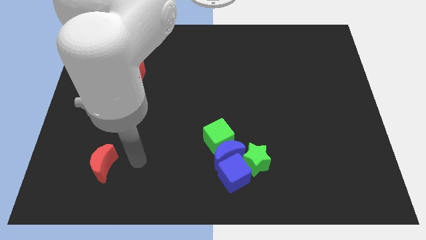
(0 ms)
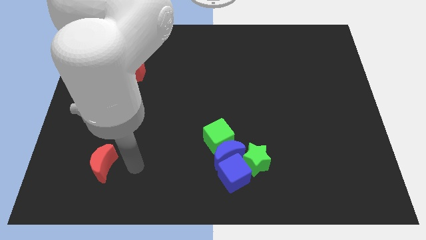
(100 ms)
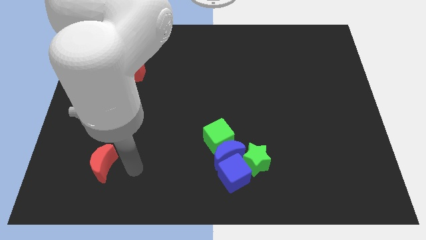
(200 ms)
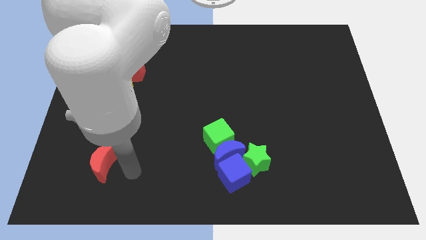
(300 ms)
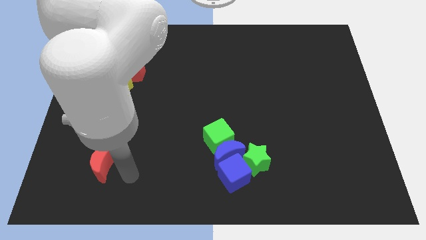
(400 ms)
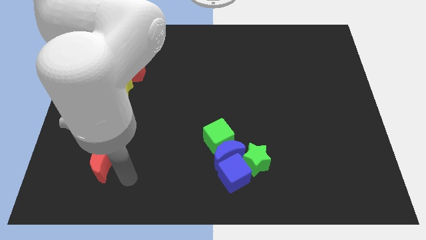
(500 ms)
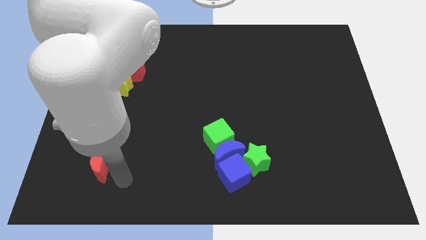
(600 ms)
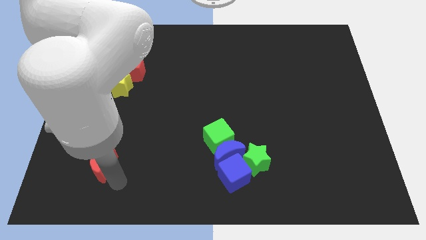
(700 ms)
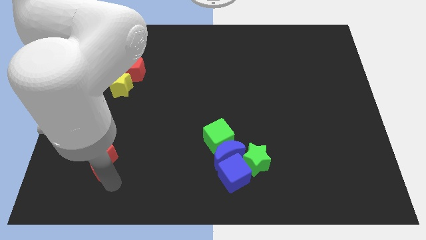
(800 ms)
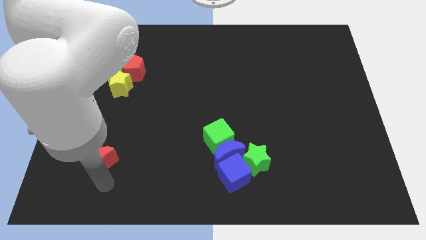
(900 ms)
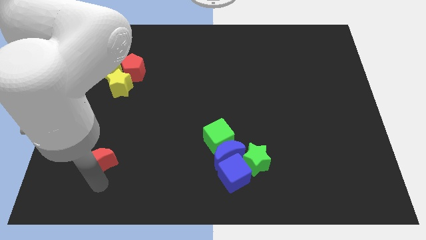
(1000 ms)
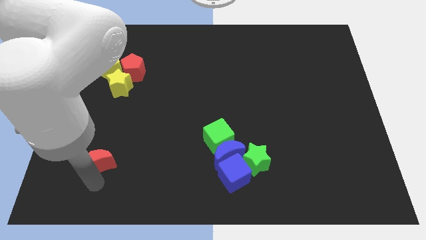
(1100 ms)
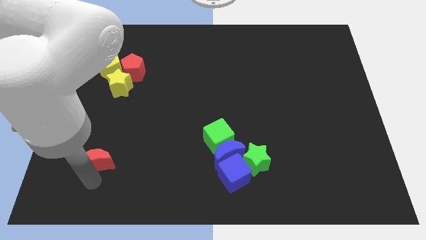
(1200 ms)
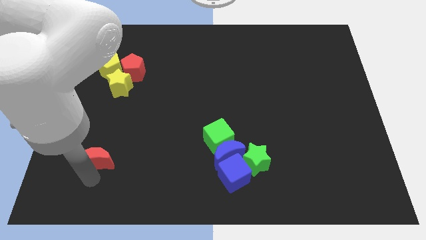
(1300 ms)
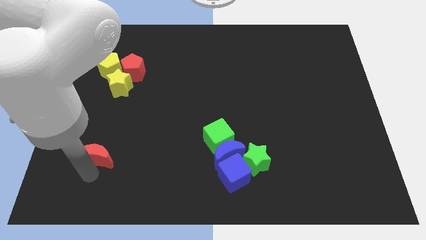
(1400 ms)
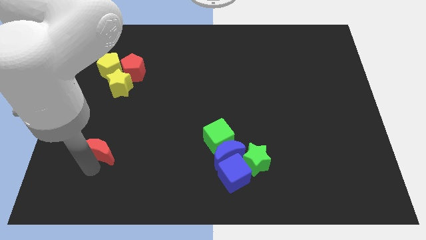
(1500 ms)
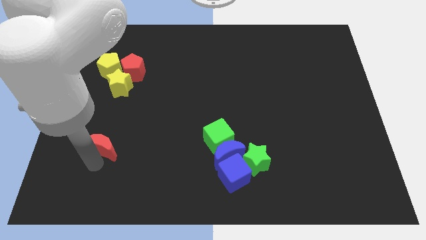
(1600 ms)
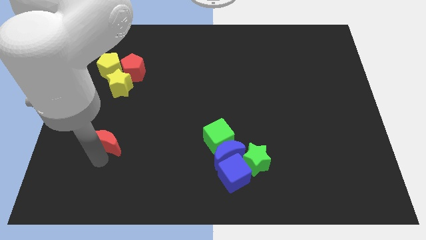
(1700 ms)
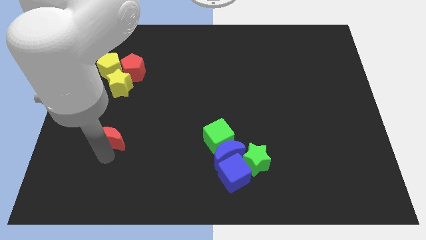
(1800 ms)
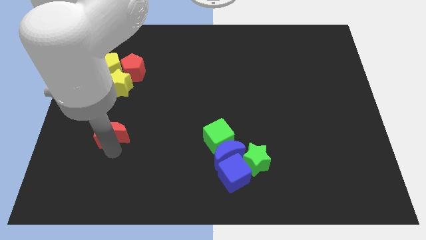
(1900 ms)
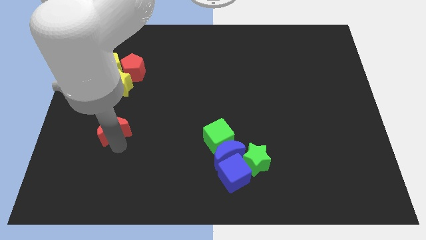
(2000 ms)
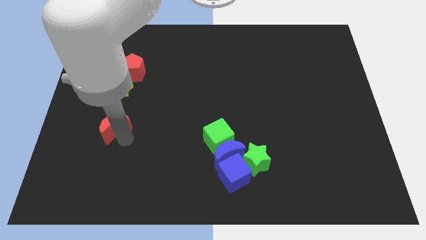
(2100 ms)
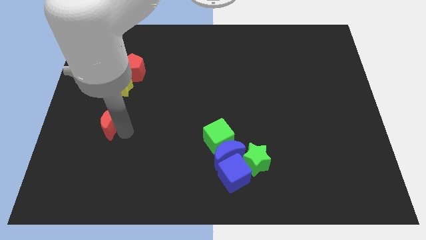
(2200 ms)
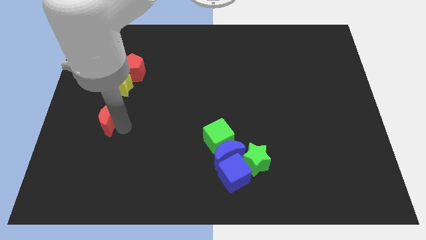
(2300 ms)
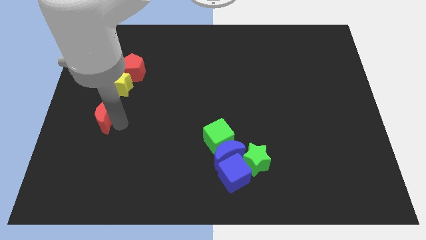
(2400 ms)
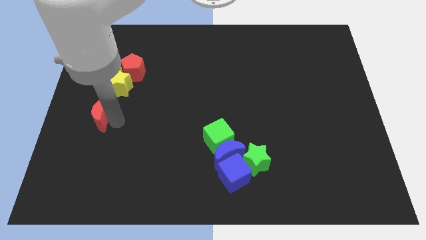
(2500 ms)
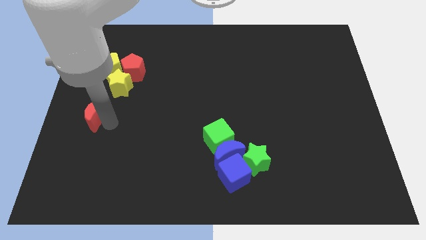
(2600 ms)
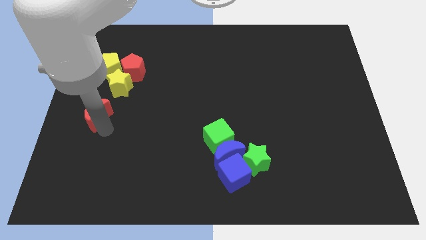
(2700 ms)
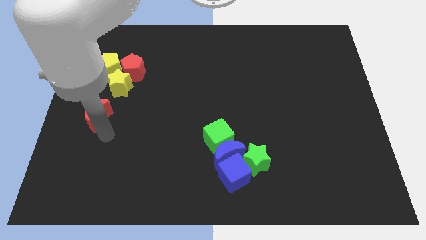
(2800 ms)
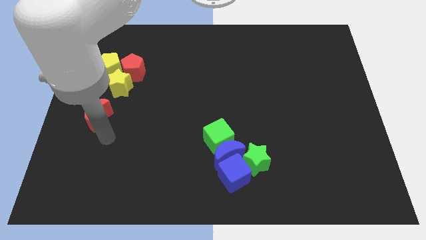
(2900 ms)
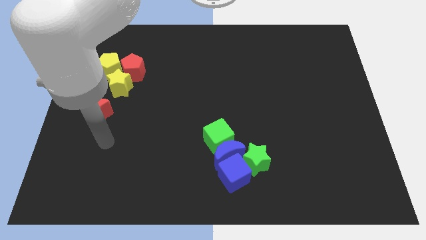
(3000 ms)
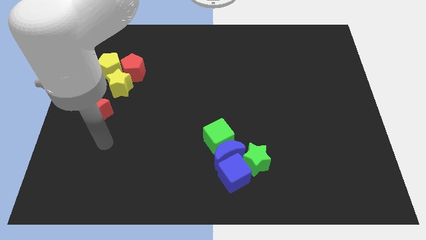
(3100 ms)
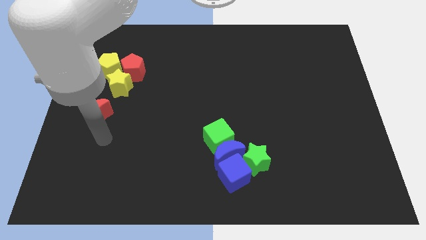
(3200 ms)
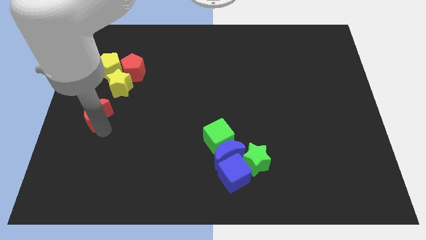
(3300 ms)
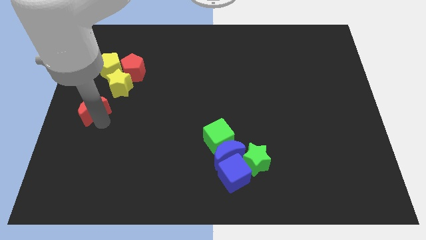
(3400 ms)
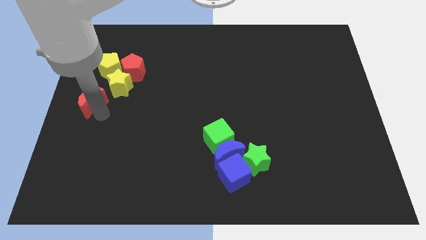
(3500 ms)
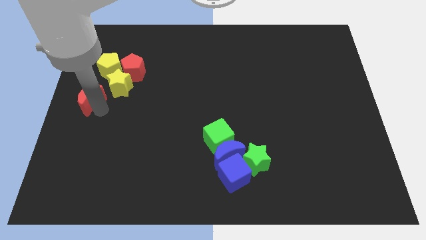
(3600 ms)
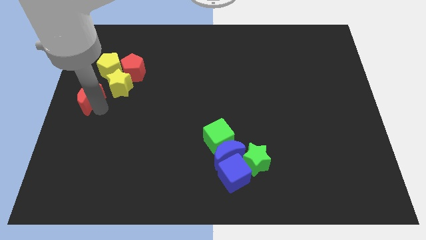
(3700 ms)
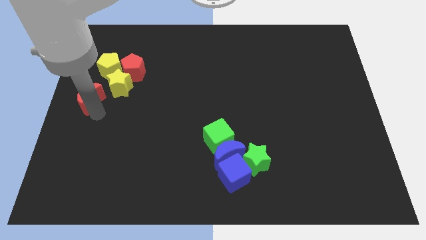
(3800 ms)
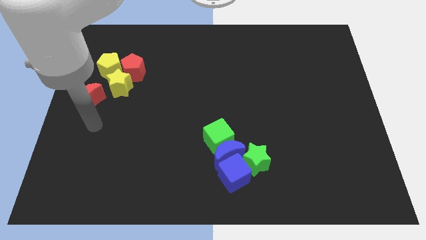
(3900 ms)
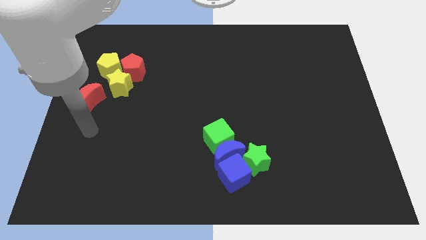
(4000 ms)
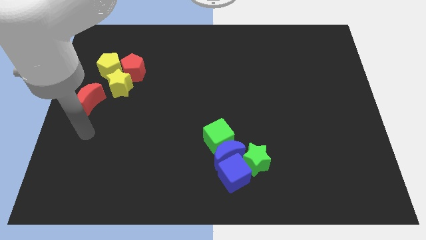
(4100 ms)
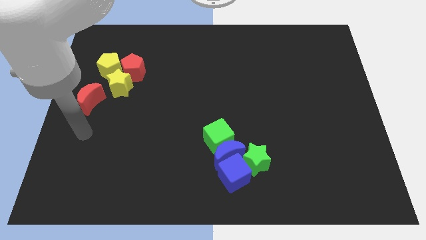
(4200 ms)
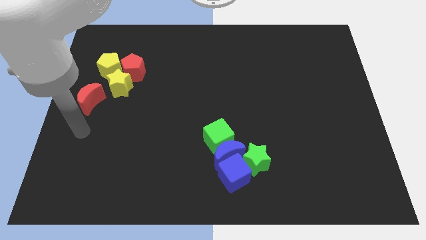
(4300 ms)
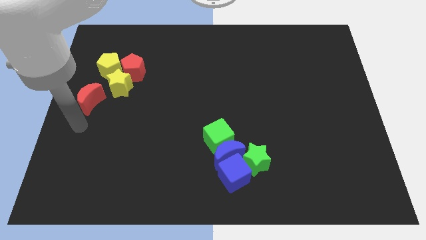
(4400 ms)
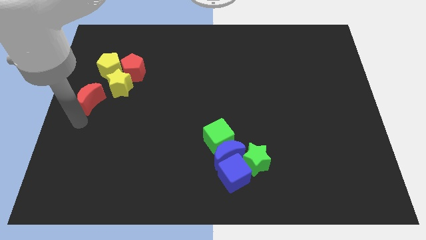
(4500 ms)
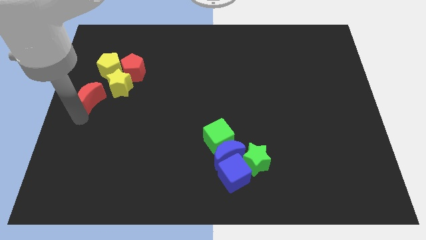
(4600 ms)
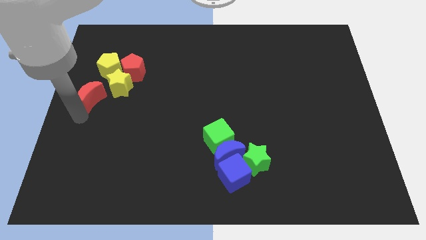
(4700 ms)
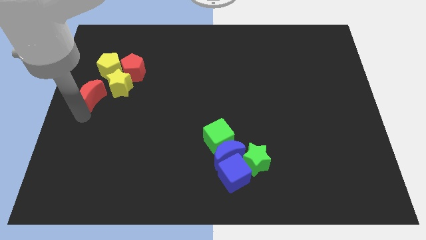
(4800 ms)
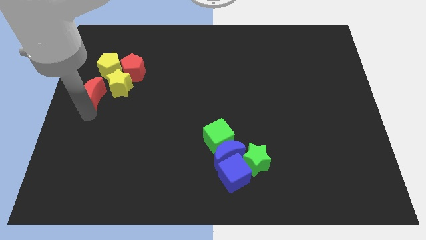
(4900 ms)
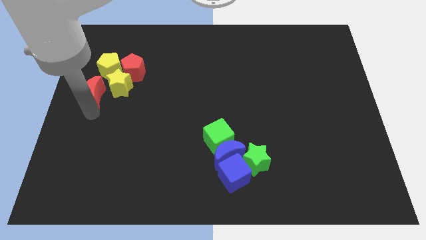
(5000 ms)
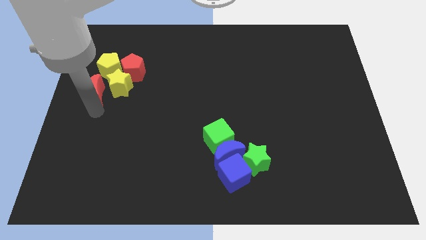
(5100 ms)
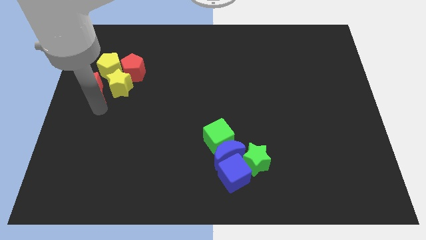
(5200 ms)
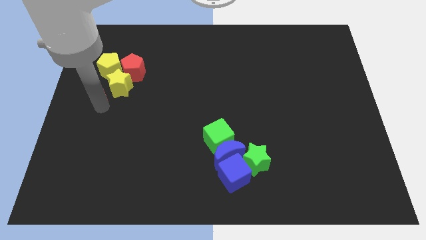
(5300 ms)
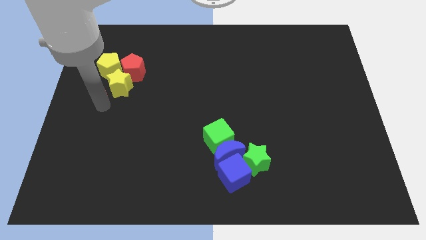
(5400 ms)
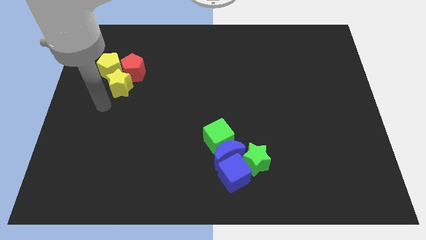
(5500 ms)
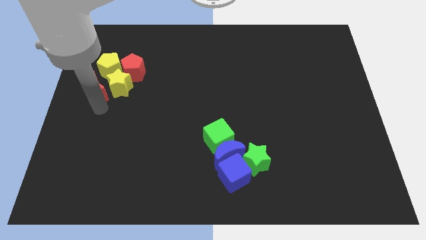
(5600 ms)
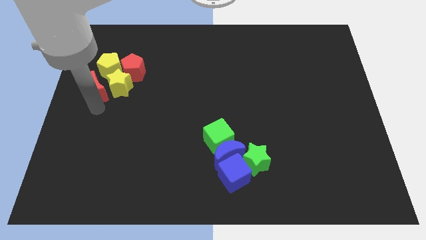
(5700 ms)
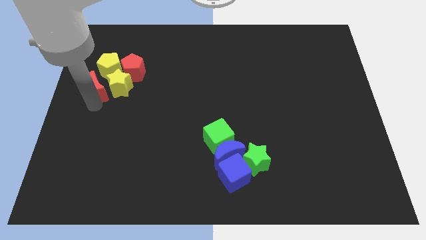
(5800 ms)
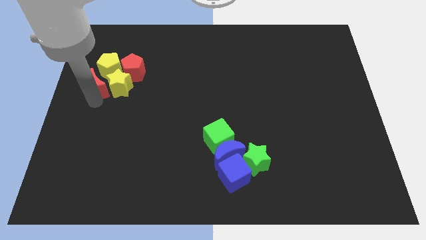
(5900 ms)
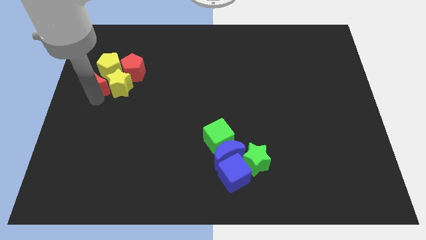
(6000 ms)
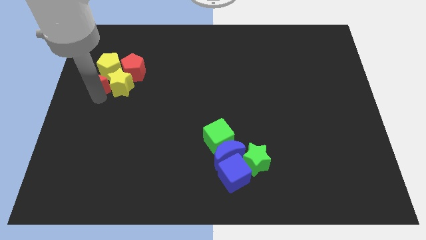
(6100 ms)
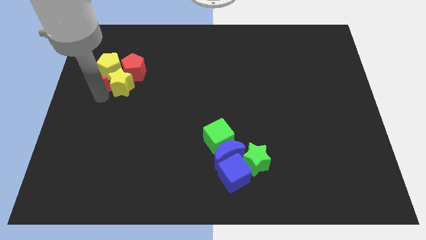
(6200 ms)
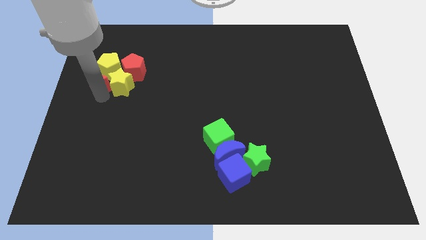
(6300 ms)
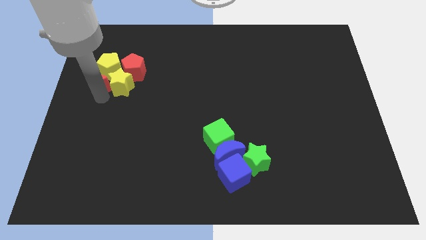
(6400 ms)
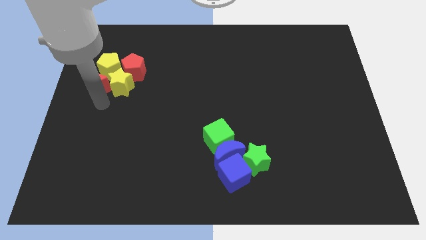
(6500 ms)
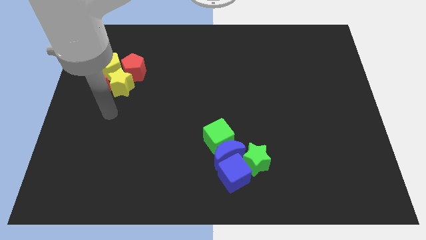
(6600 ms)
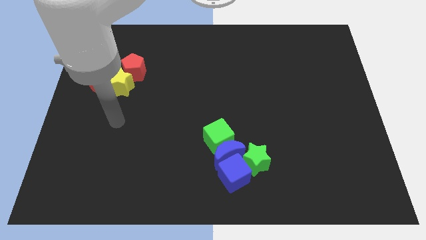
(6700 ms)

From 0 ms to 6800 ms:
push the red crescent to the left of yellow star

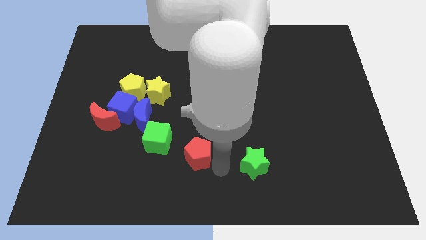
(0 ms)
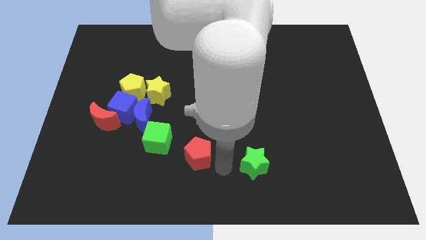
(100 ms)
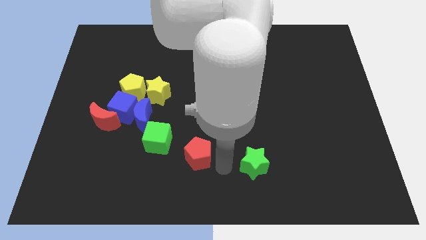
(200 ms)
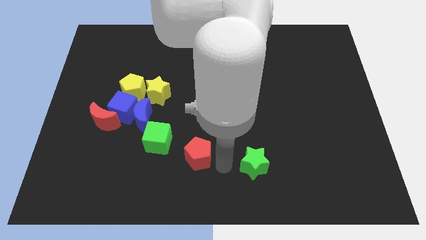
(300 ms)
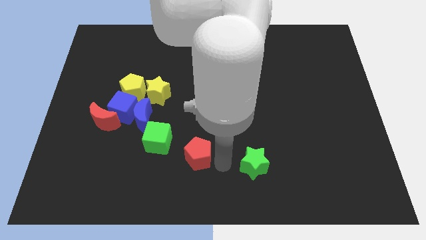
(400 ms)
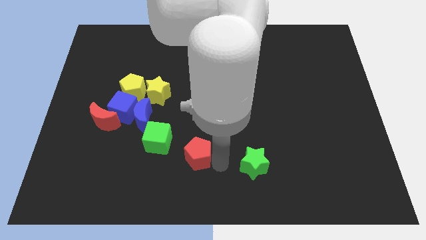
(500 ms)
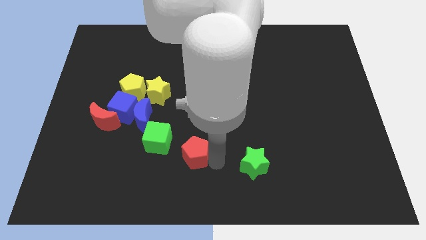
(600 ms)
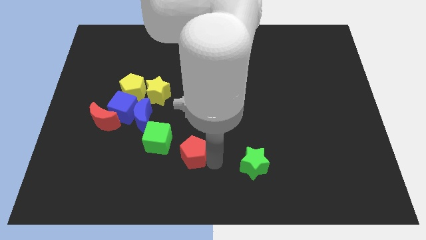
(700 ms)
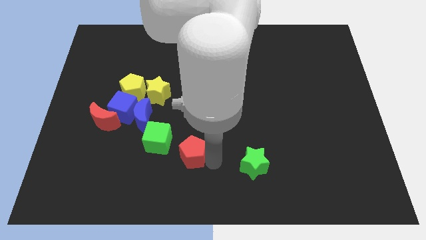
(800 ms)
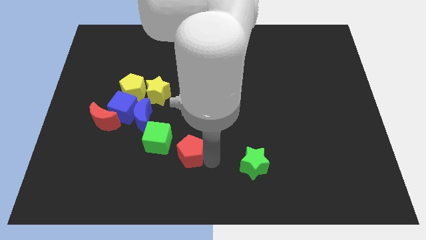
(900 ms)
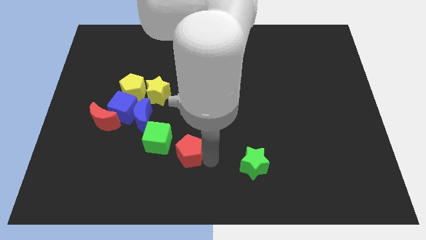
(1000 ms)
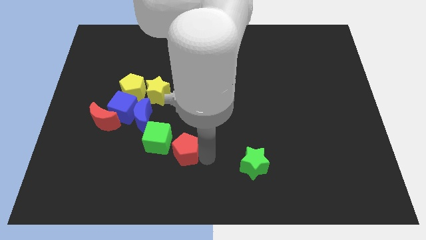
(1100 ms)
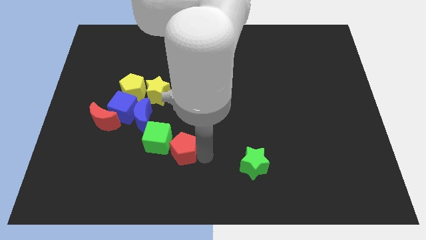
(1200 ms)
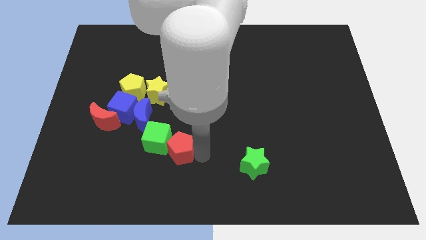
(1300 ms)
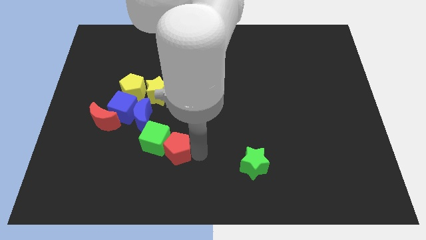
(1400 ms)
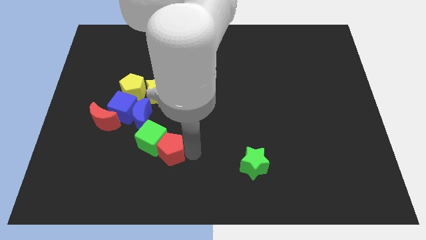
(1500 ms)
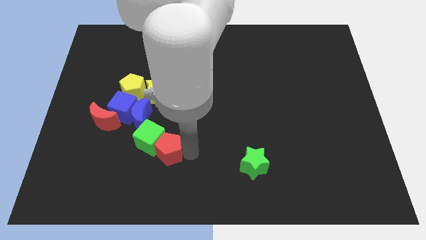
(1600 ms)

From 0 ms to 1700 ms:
push the red pentagon into the green cube

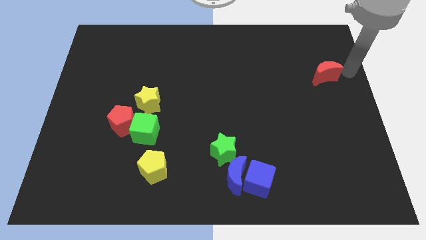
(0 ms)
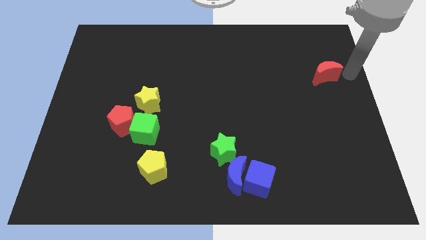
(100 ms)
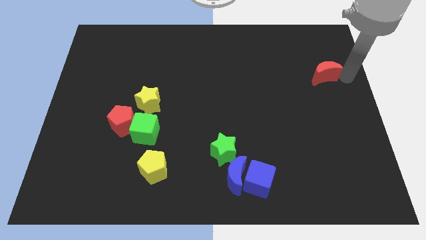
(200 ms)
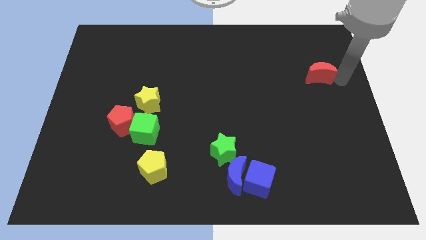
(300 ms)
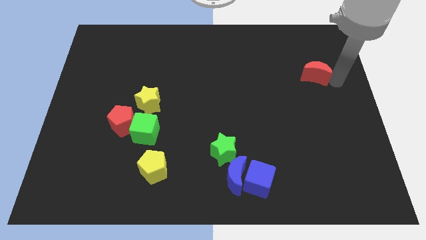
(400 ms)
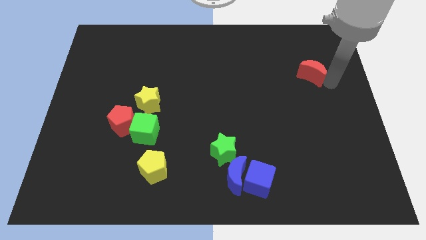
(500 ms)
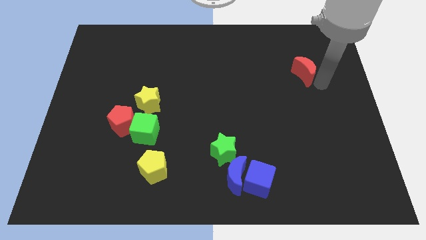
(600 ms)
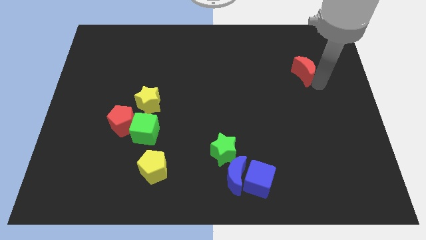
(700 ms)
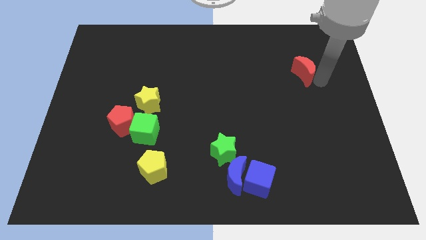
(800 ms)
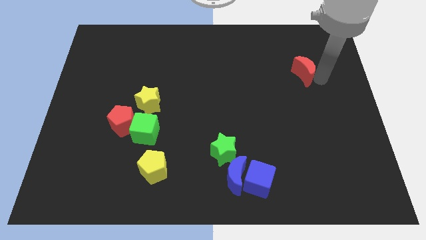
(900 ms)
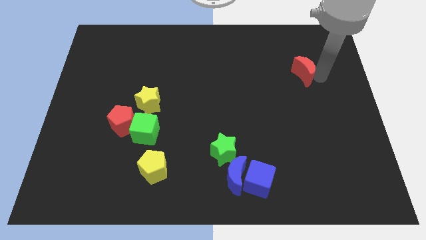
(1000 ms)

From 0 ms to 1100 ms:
move the red moon slightly towards left
